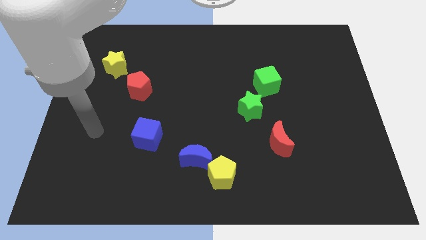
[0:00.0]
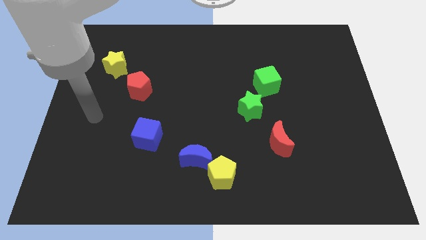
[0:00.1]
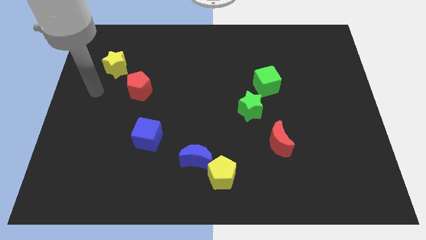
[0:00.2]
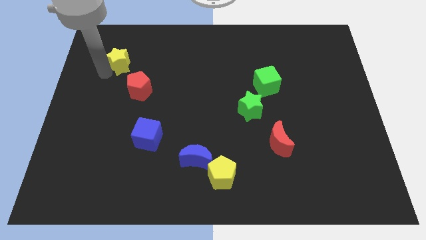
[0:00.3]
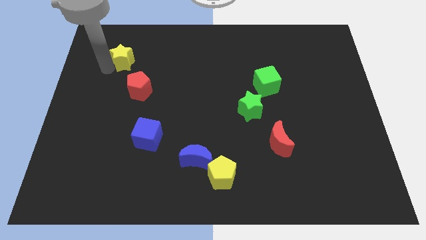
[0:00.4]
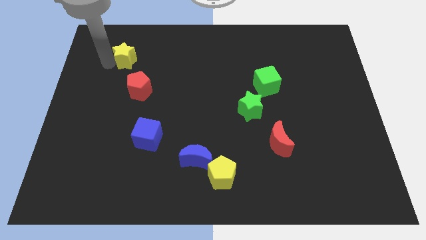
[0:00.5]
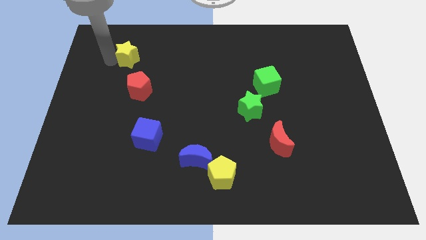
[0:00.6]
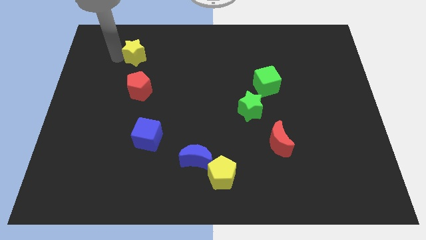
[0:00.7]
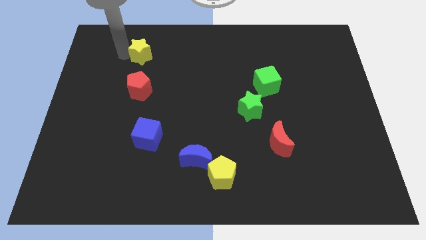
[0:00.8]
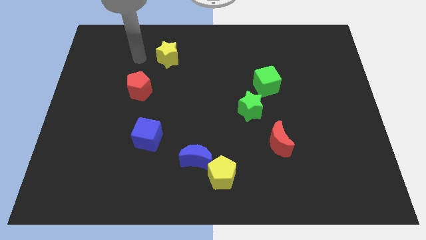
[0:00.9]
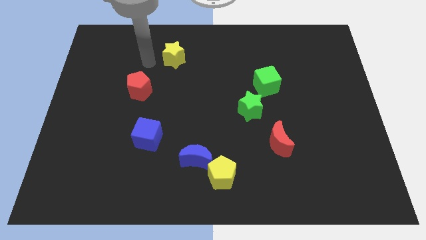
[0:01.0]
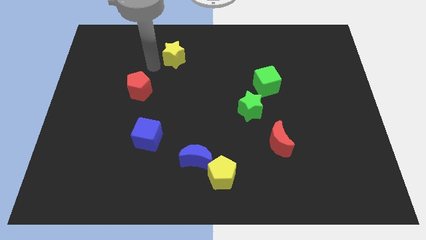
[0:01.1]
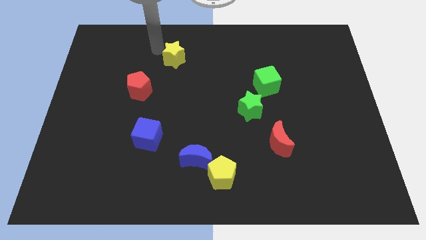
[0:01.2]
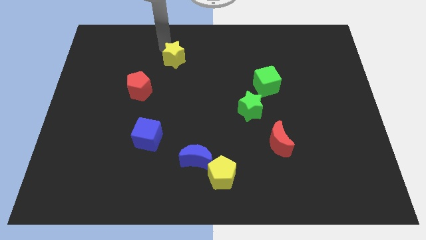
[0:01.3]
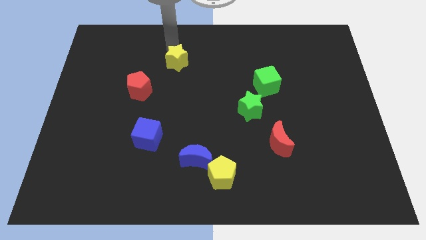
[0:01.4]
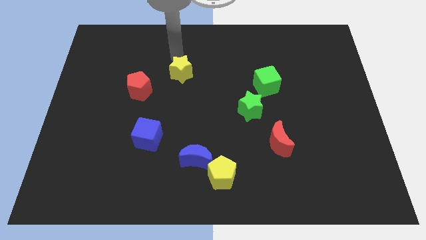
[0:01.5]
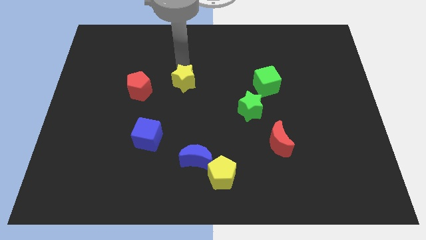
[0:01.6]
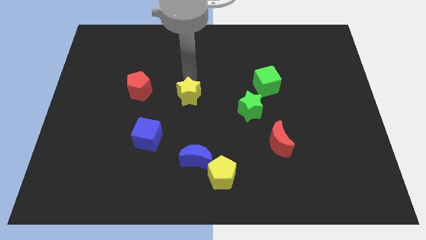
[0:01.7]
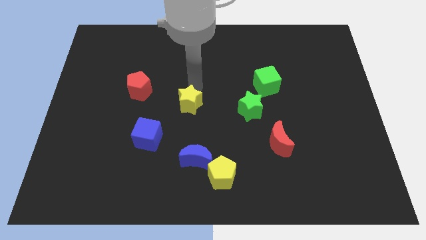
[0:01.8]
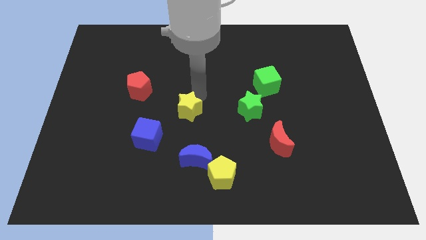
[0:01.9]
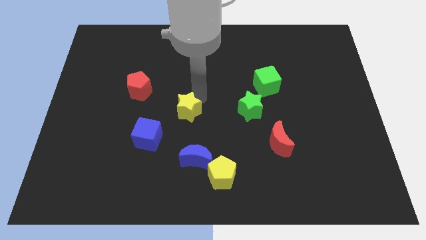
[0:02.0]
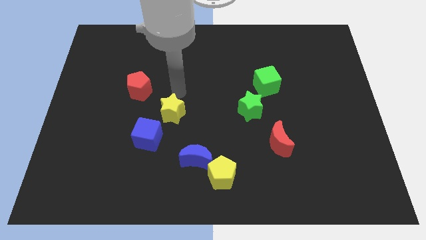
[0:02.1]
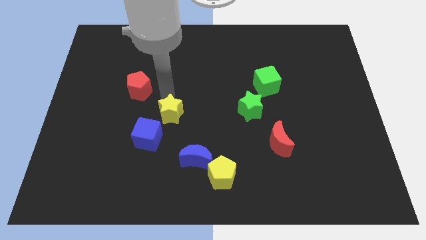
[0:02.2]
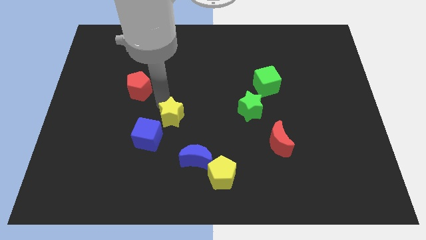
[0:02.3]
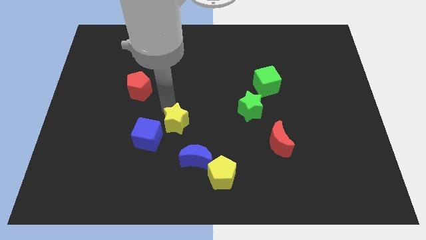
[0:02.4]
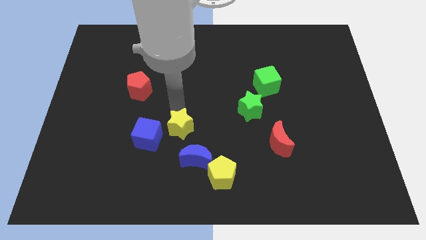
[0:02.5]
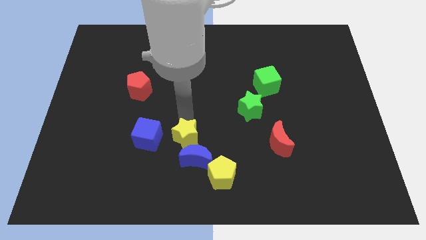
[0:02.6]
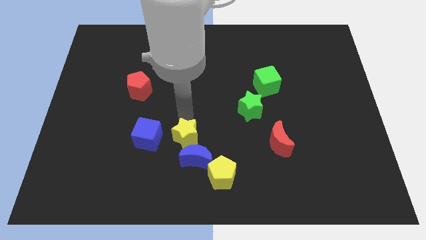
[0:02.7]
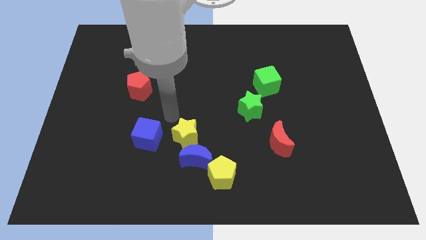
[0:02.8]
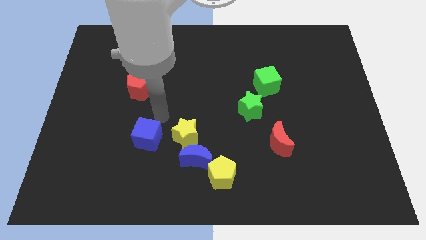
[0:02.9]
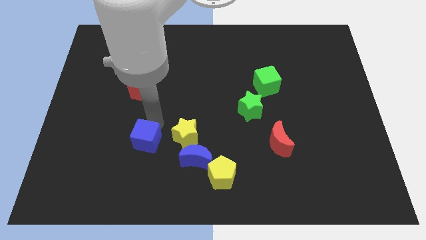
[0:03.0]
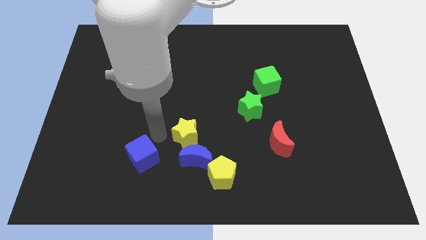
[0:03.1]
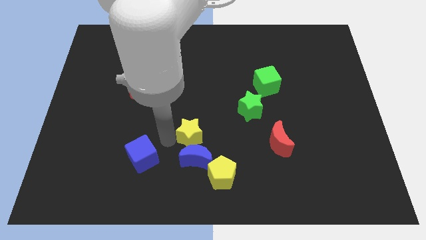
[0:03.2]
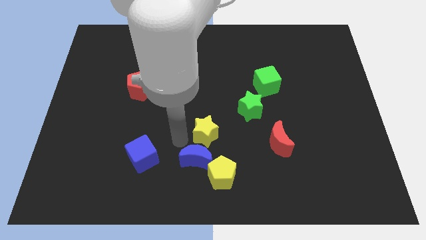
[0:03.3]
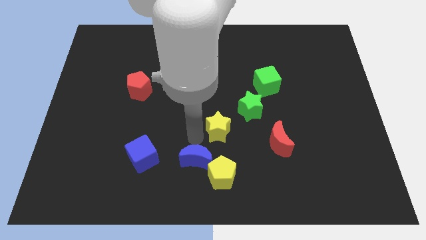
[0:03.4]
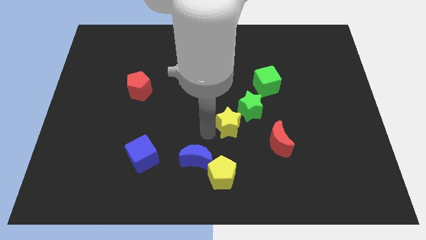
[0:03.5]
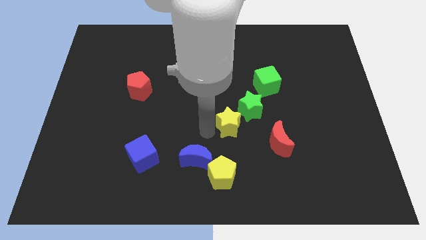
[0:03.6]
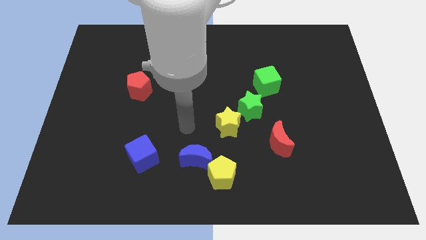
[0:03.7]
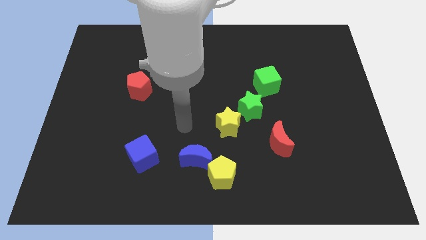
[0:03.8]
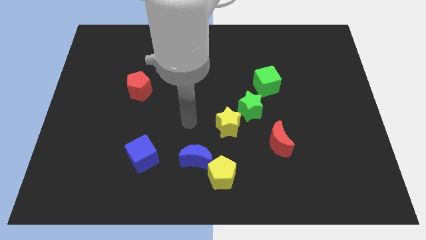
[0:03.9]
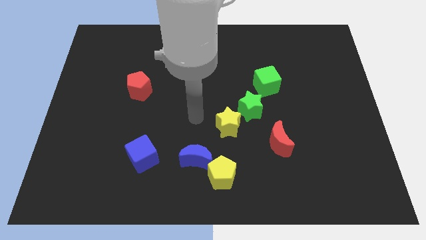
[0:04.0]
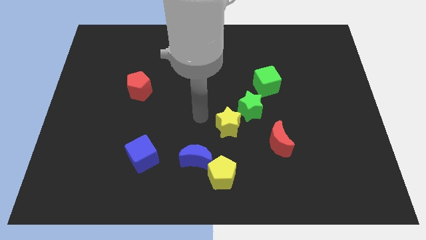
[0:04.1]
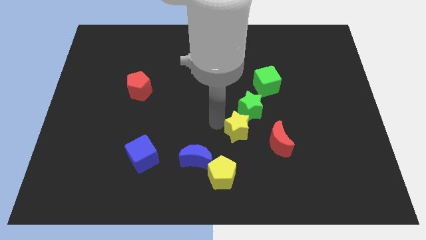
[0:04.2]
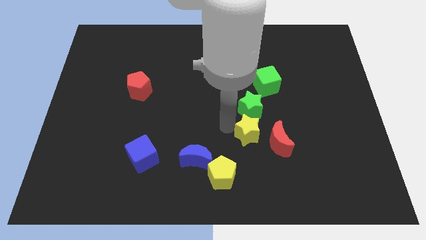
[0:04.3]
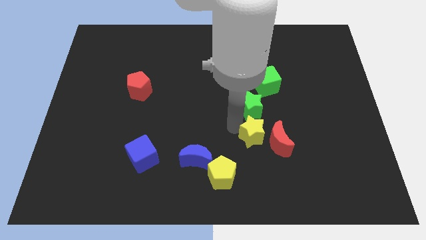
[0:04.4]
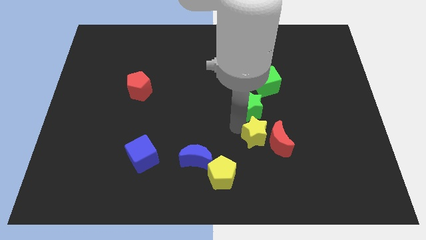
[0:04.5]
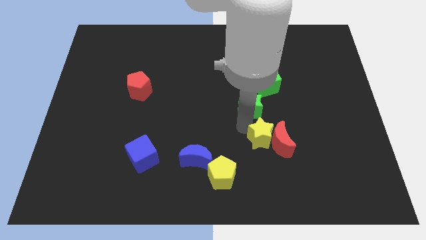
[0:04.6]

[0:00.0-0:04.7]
push the yellow star to the red moon

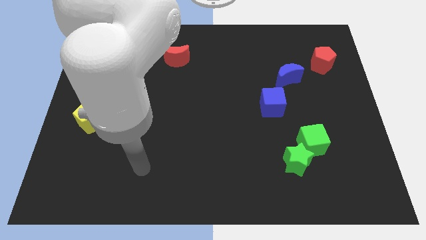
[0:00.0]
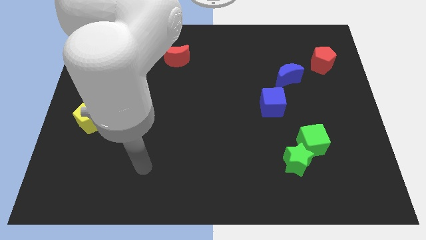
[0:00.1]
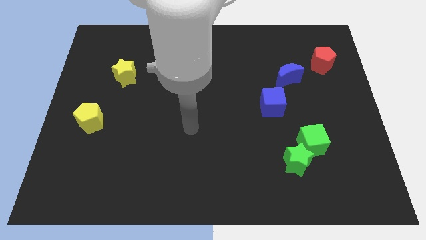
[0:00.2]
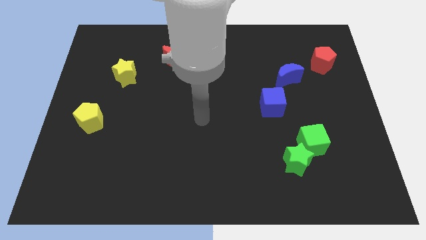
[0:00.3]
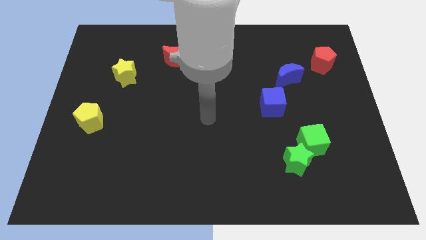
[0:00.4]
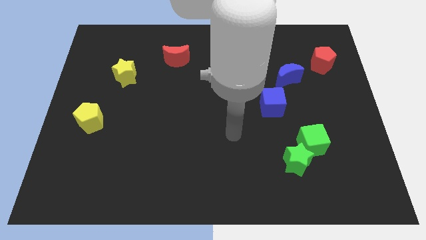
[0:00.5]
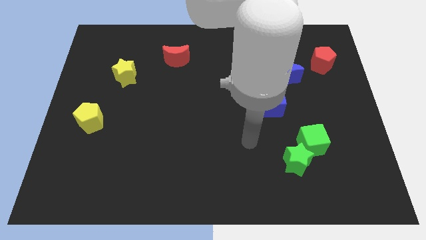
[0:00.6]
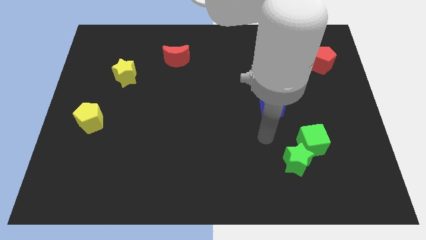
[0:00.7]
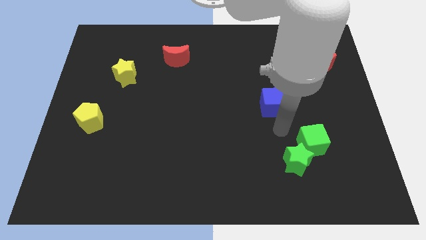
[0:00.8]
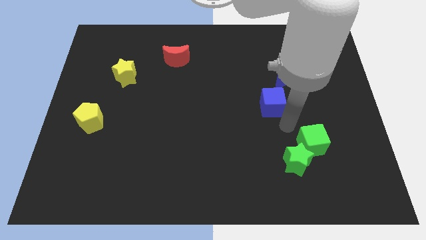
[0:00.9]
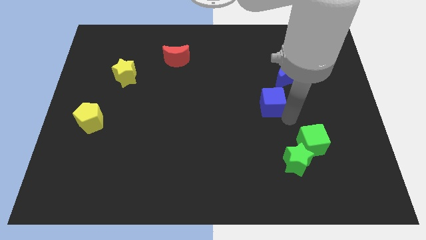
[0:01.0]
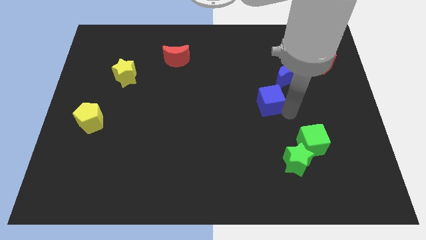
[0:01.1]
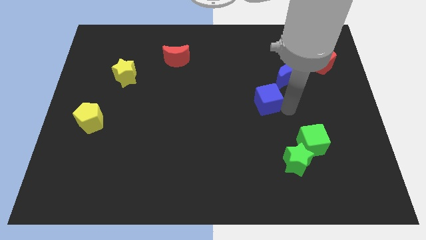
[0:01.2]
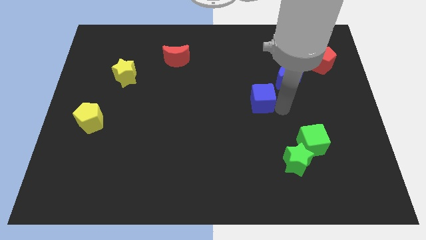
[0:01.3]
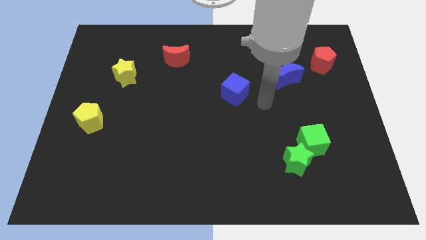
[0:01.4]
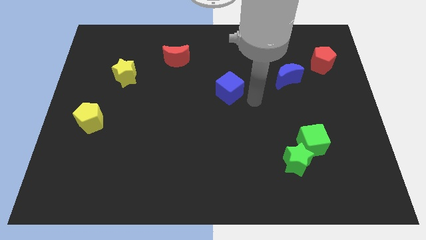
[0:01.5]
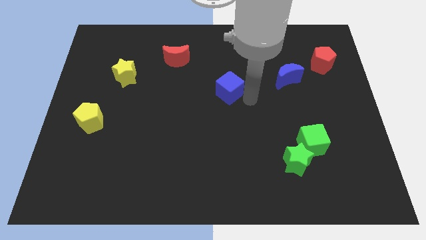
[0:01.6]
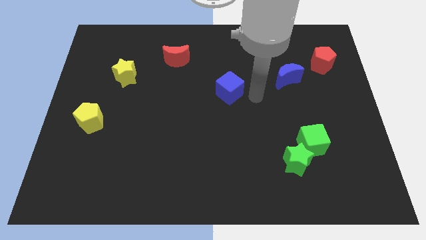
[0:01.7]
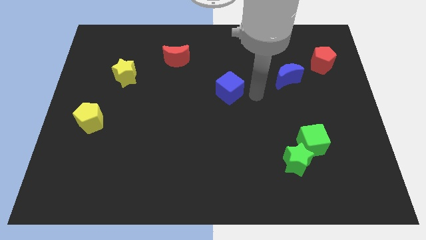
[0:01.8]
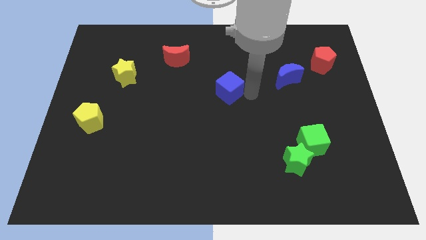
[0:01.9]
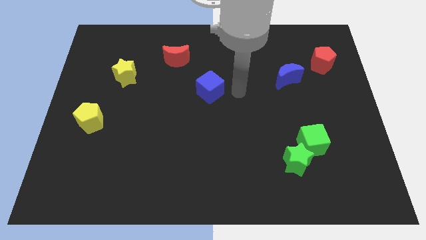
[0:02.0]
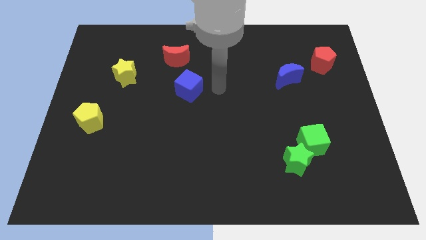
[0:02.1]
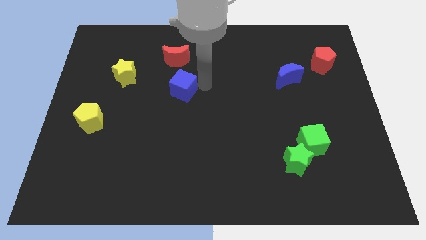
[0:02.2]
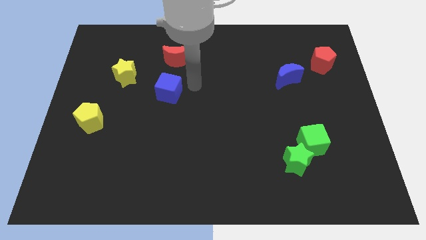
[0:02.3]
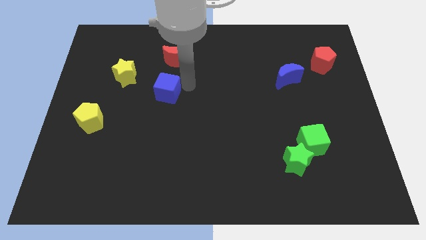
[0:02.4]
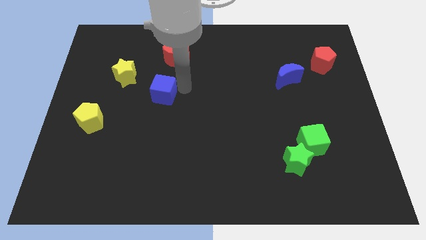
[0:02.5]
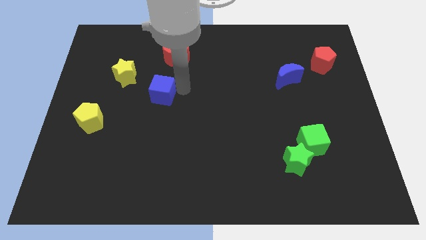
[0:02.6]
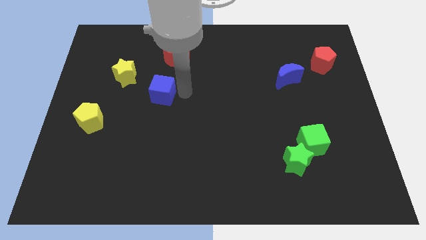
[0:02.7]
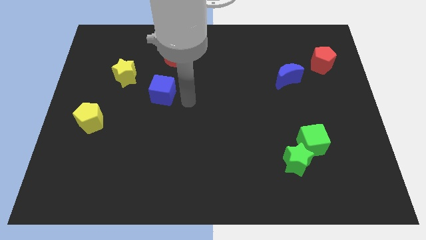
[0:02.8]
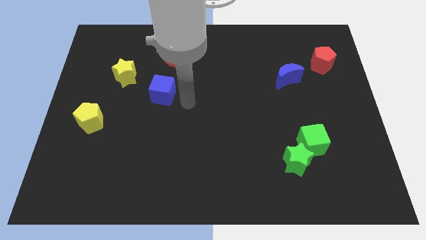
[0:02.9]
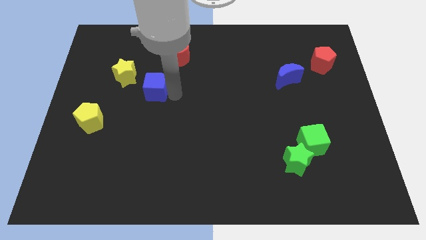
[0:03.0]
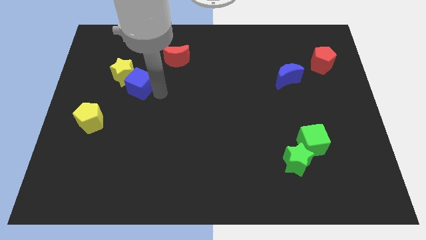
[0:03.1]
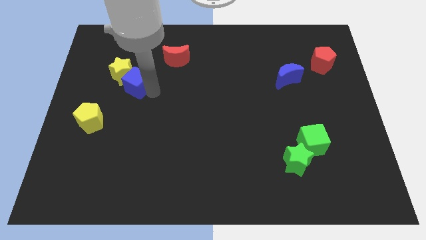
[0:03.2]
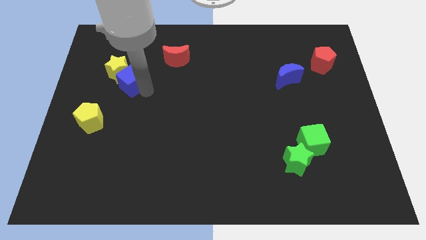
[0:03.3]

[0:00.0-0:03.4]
slide the blue cube to the yellow star

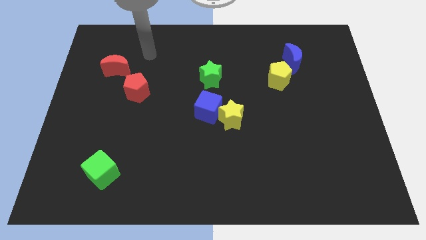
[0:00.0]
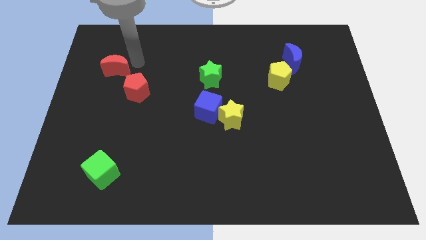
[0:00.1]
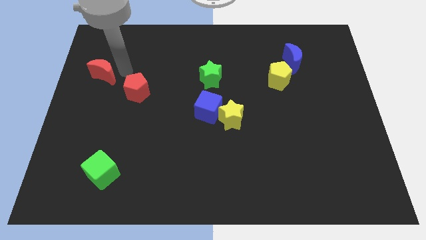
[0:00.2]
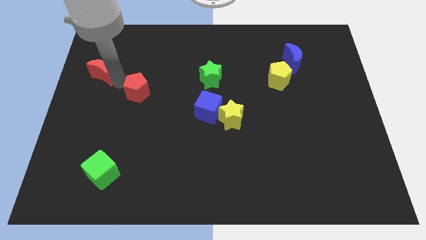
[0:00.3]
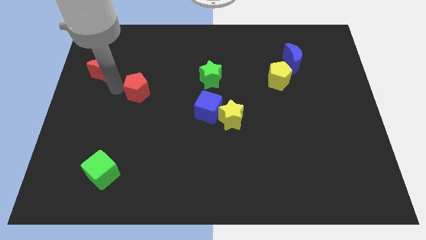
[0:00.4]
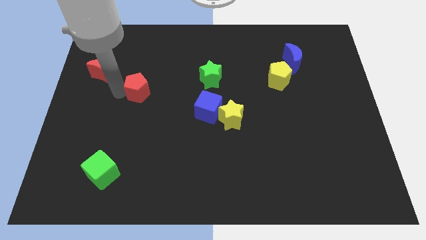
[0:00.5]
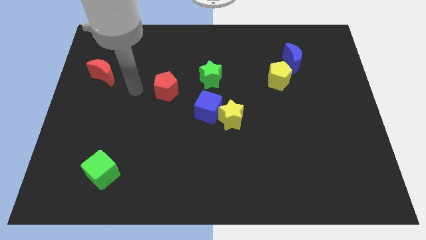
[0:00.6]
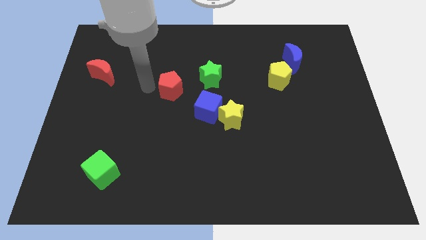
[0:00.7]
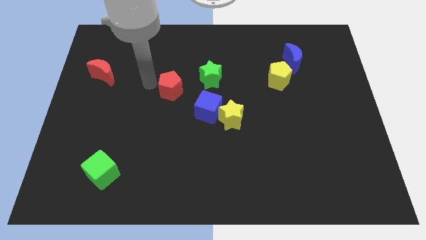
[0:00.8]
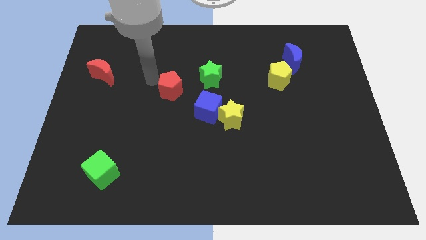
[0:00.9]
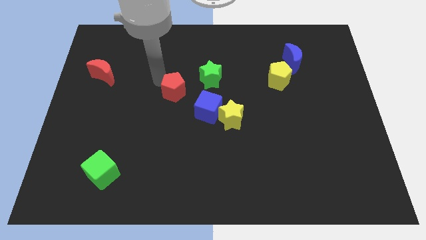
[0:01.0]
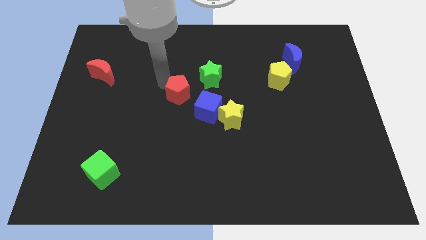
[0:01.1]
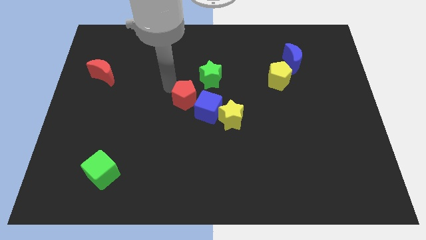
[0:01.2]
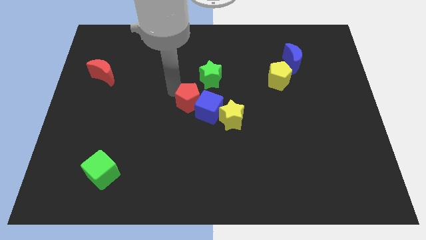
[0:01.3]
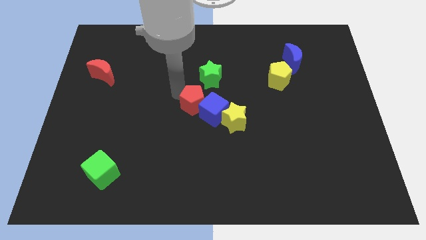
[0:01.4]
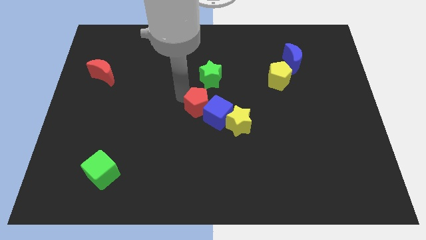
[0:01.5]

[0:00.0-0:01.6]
slide the red pentagon to the blue cube
